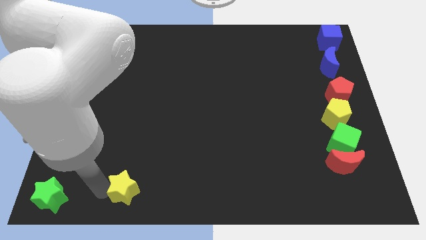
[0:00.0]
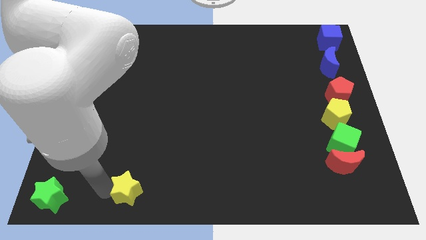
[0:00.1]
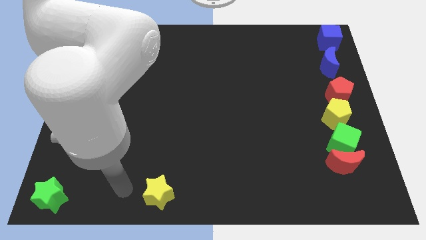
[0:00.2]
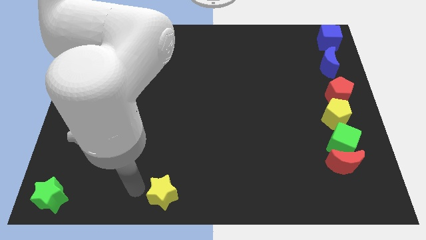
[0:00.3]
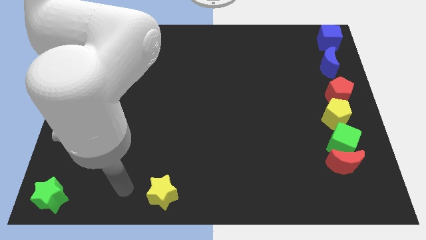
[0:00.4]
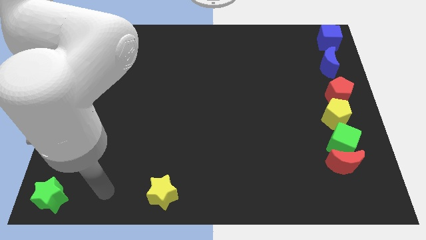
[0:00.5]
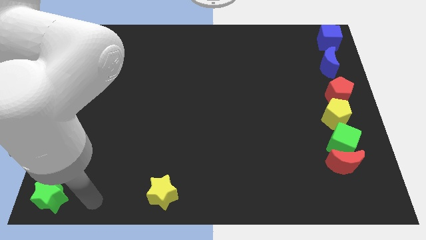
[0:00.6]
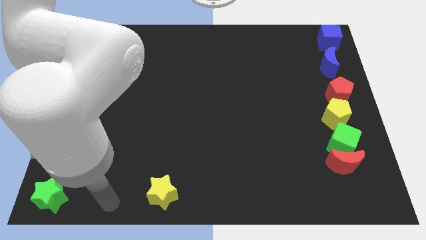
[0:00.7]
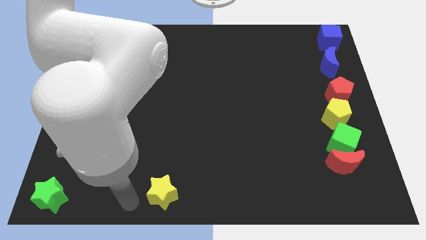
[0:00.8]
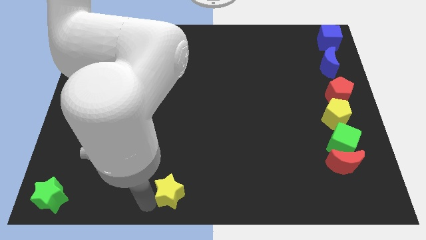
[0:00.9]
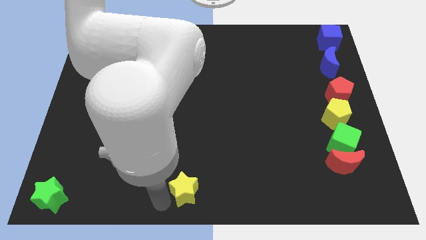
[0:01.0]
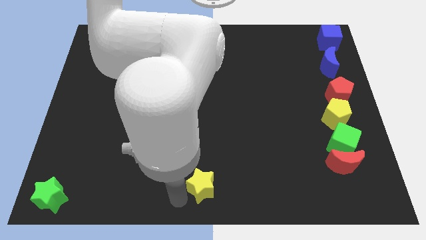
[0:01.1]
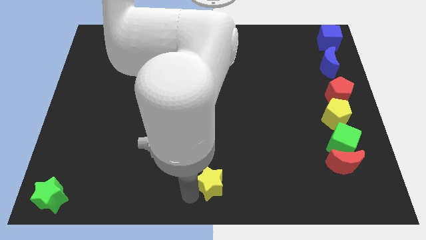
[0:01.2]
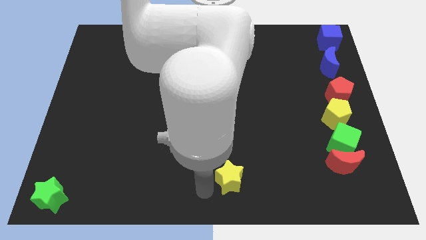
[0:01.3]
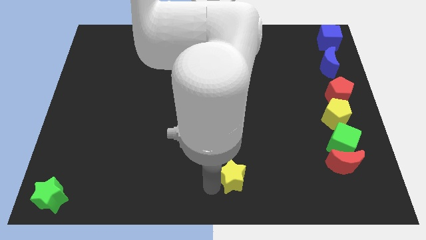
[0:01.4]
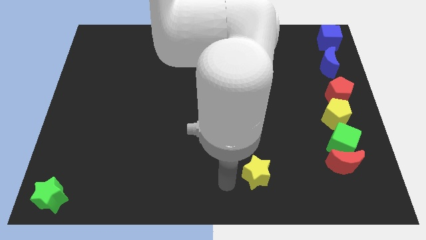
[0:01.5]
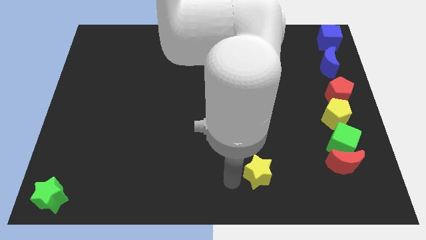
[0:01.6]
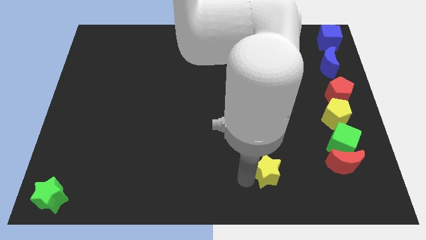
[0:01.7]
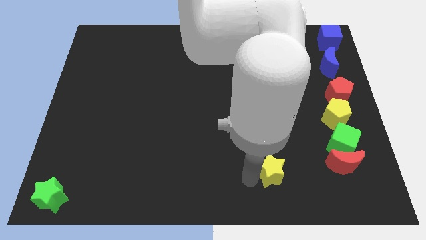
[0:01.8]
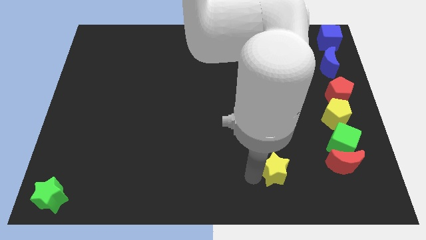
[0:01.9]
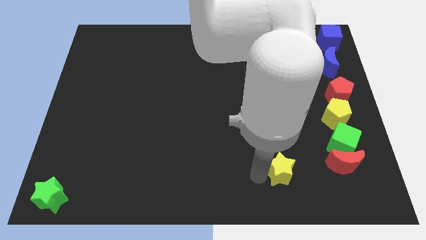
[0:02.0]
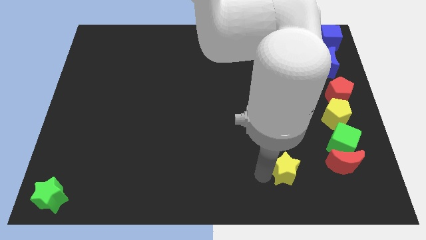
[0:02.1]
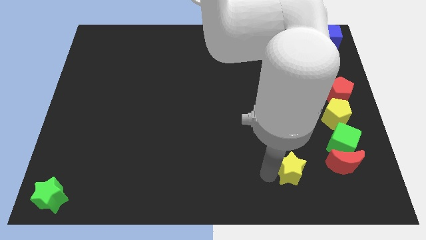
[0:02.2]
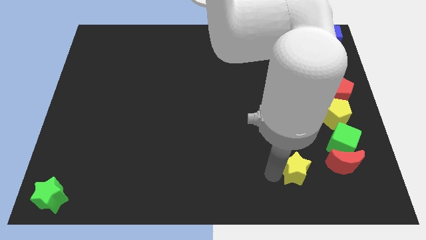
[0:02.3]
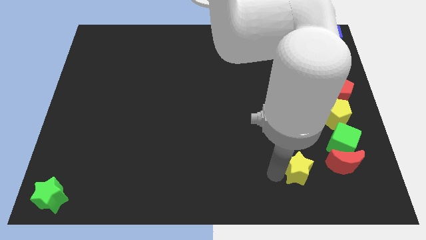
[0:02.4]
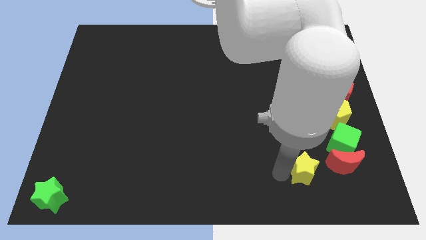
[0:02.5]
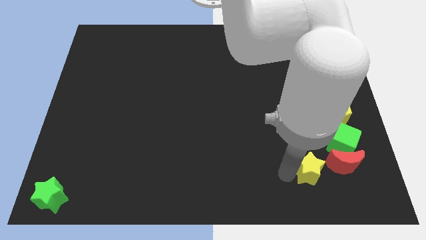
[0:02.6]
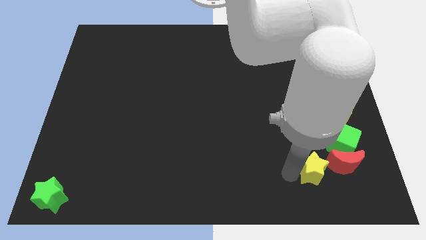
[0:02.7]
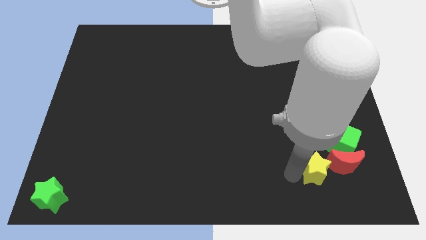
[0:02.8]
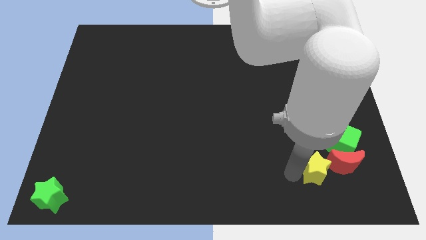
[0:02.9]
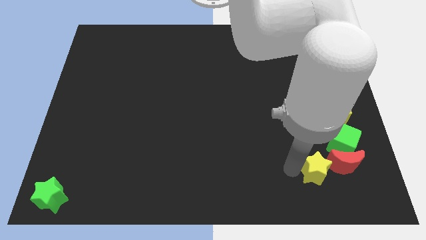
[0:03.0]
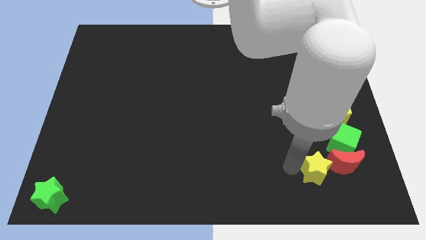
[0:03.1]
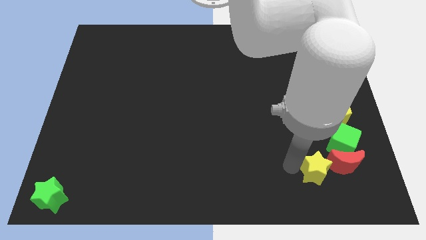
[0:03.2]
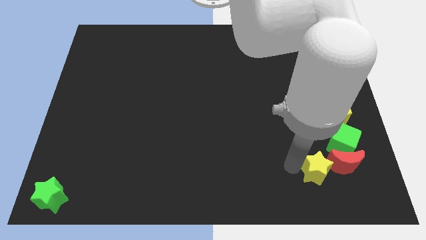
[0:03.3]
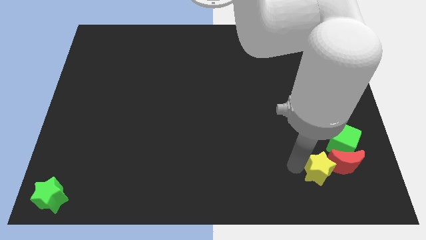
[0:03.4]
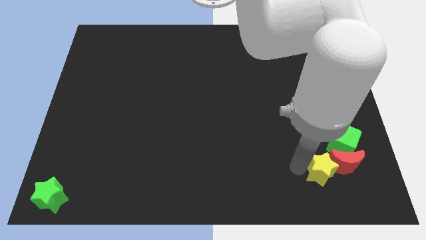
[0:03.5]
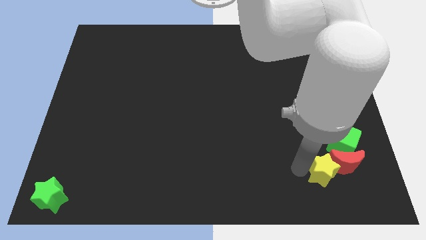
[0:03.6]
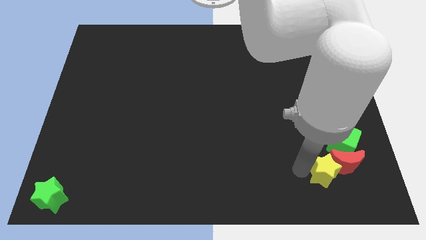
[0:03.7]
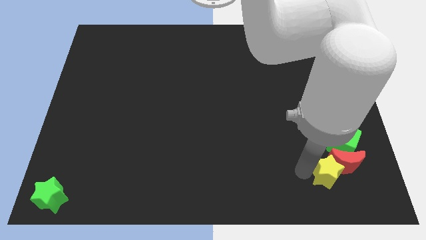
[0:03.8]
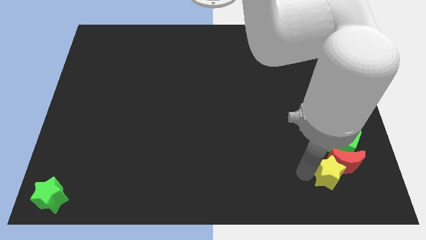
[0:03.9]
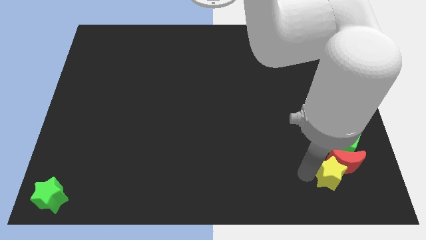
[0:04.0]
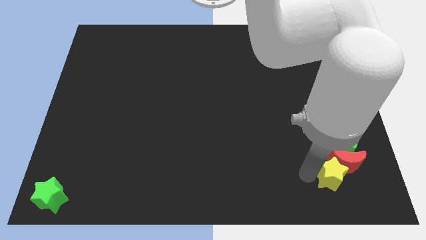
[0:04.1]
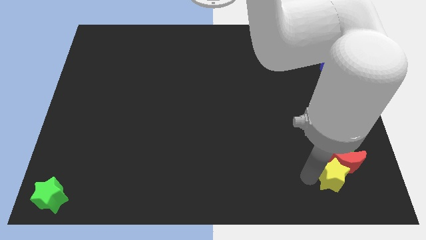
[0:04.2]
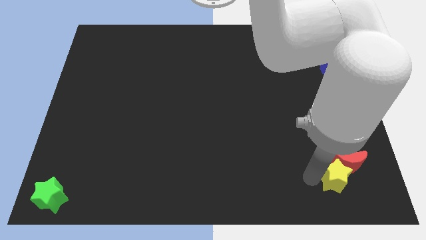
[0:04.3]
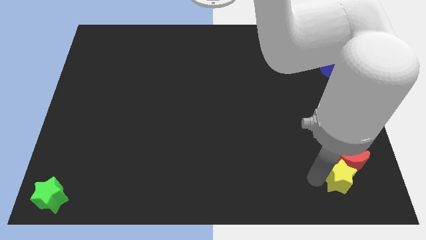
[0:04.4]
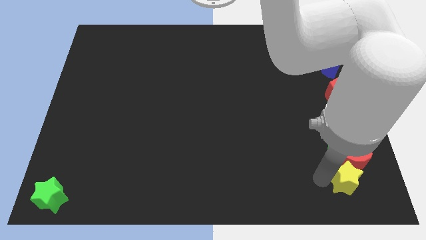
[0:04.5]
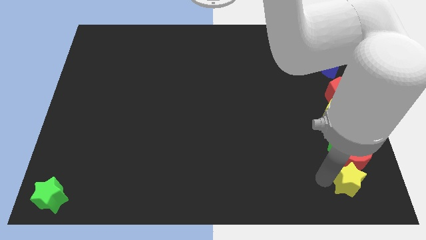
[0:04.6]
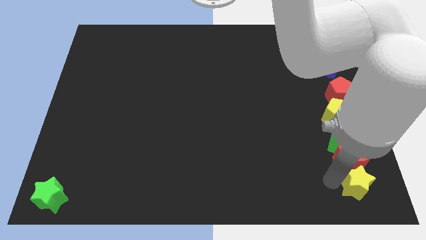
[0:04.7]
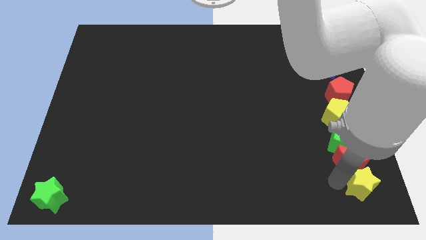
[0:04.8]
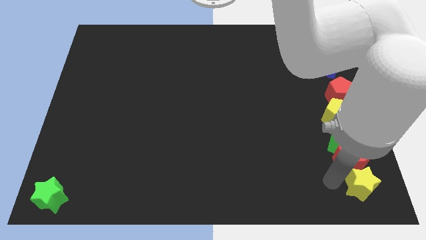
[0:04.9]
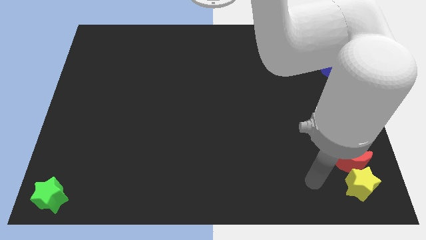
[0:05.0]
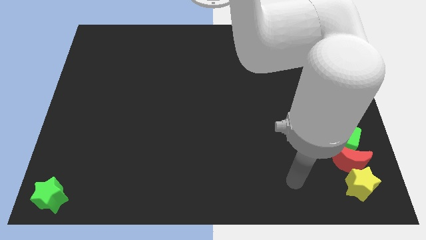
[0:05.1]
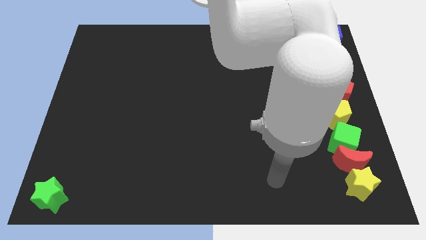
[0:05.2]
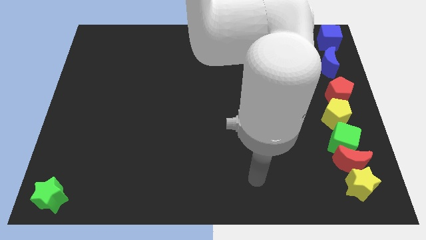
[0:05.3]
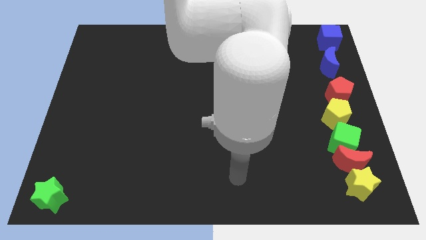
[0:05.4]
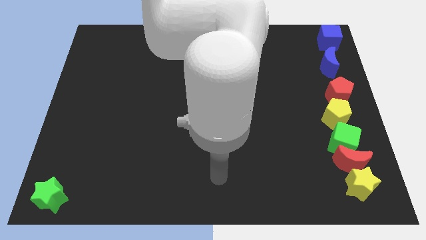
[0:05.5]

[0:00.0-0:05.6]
place the yellow star below the red crescent

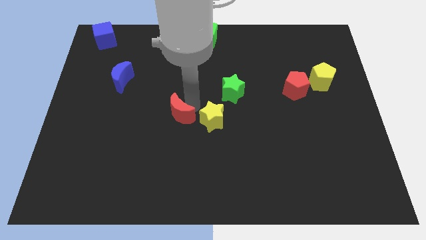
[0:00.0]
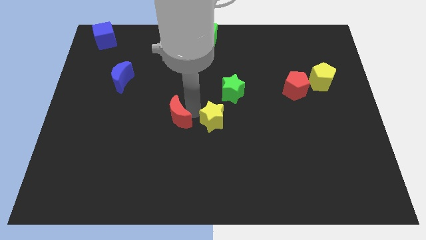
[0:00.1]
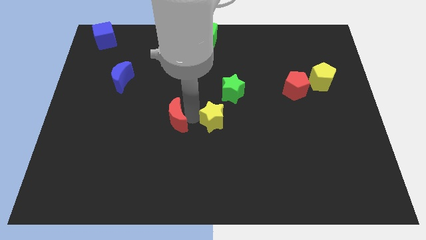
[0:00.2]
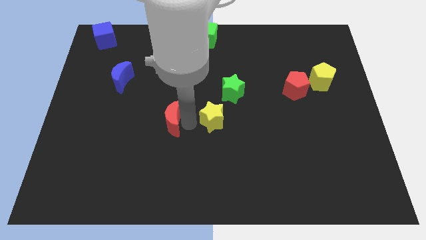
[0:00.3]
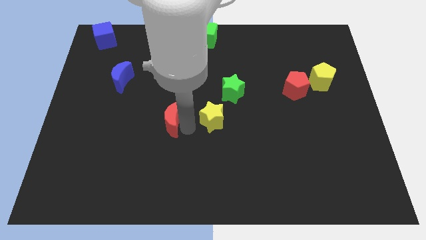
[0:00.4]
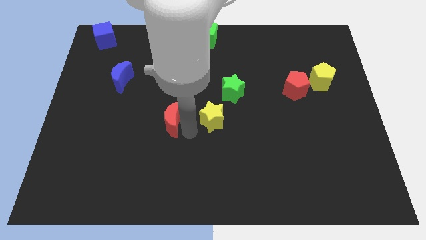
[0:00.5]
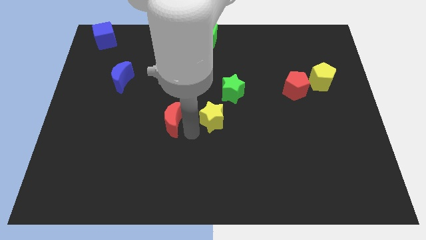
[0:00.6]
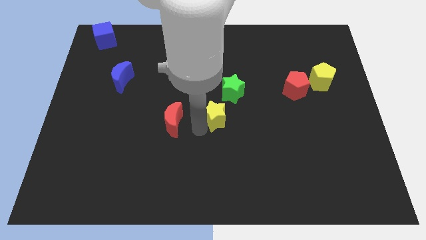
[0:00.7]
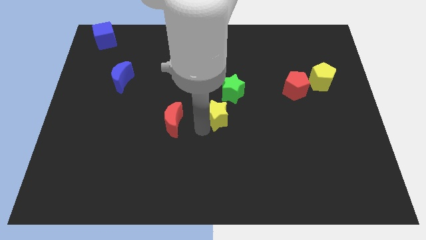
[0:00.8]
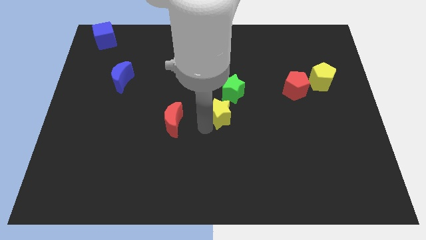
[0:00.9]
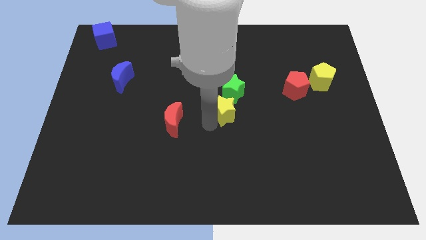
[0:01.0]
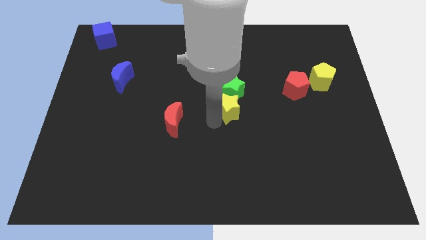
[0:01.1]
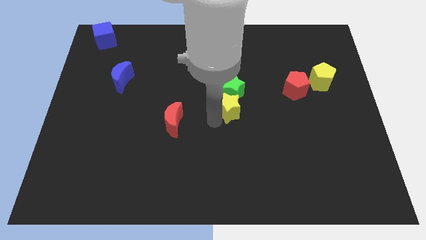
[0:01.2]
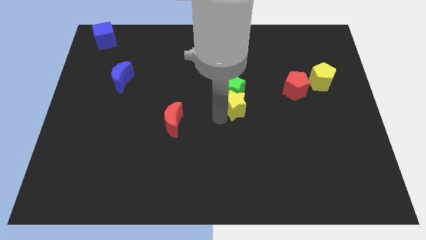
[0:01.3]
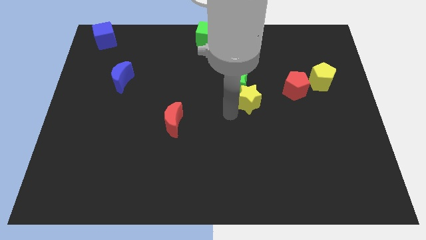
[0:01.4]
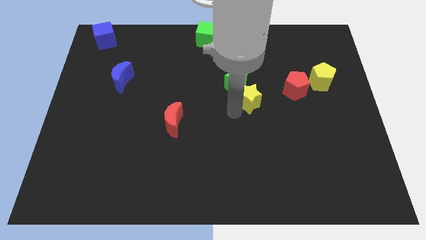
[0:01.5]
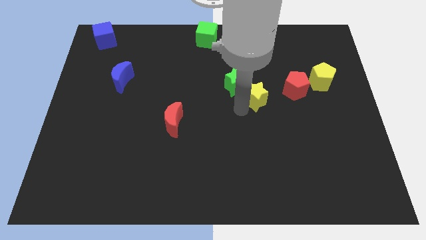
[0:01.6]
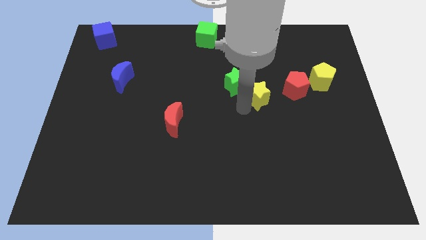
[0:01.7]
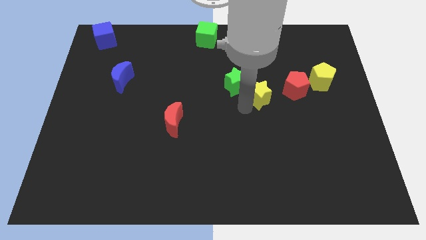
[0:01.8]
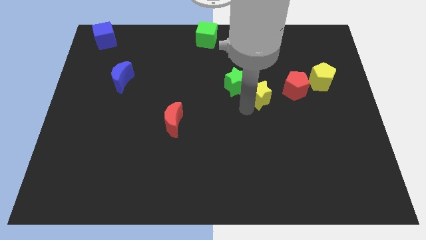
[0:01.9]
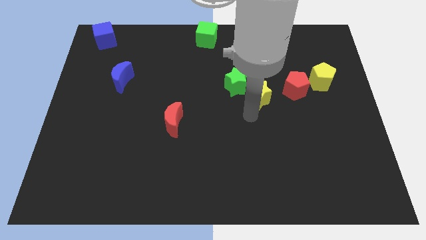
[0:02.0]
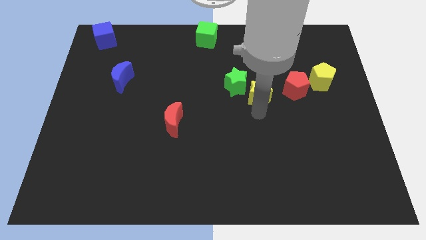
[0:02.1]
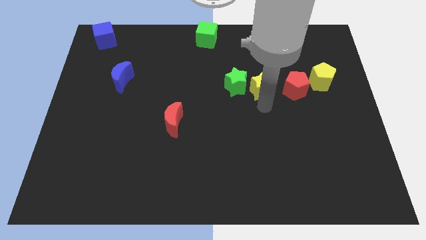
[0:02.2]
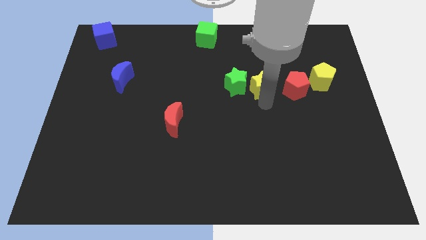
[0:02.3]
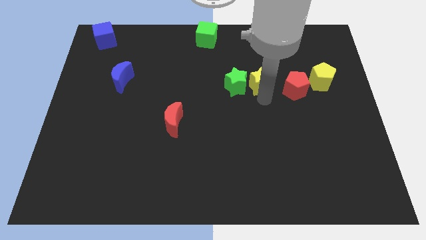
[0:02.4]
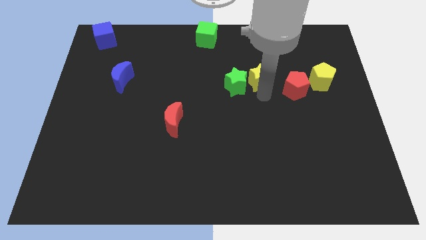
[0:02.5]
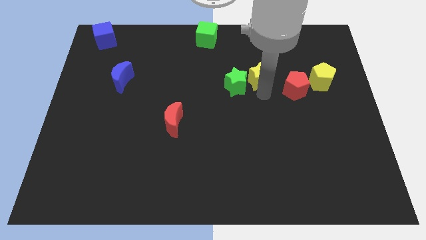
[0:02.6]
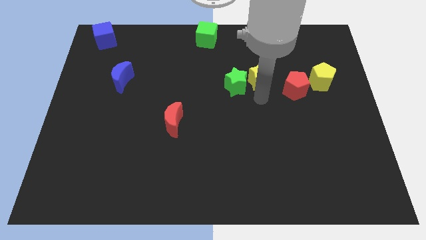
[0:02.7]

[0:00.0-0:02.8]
move the yellow star right to the green star

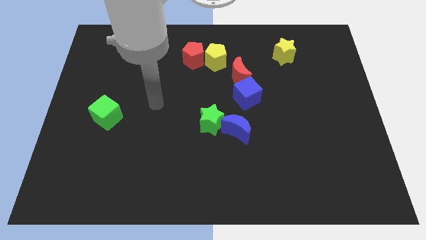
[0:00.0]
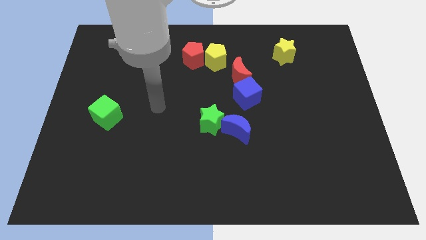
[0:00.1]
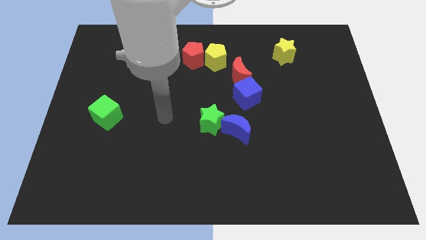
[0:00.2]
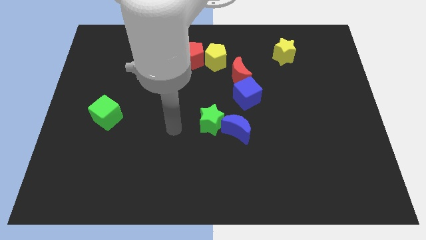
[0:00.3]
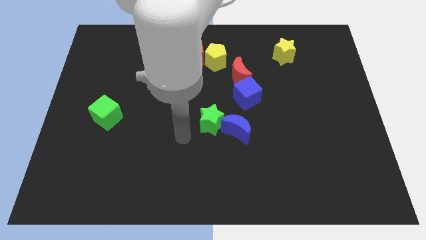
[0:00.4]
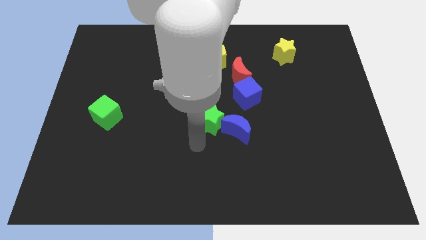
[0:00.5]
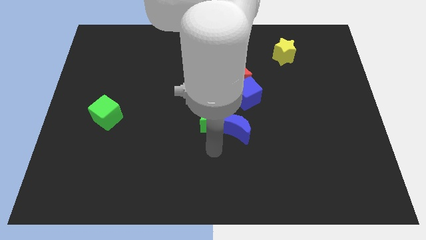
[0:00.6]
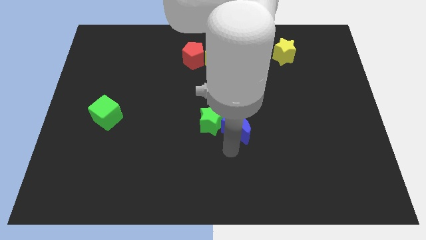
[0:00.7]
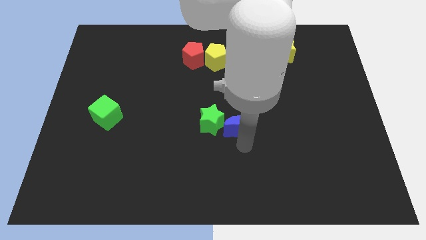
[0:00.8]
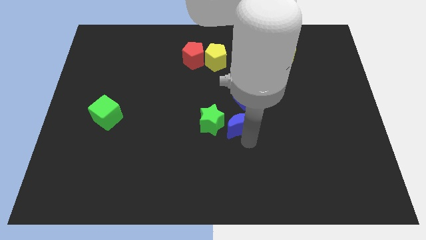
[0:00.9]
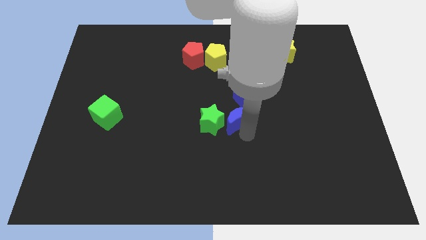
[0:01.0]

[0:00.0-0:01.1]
touch the bottom side of the blue crescent
